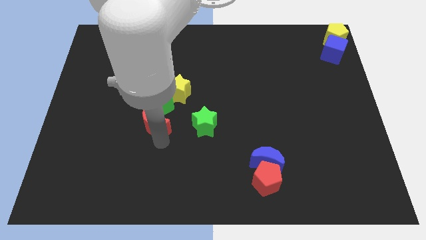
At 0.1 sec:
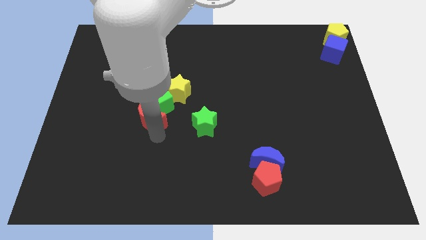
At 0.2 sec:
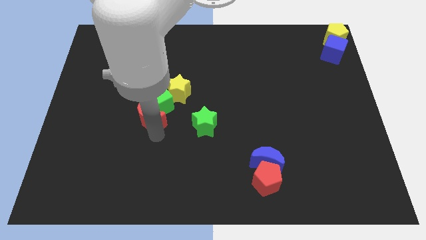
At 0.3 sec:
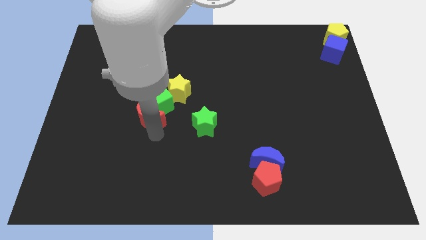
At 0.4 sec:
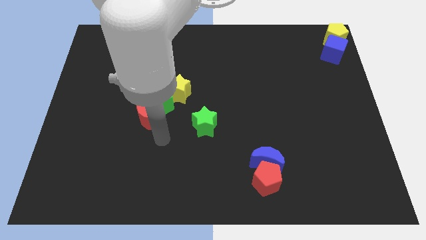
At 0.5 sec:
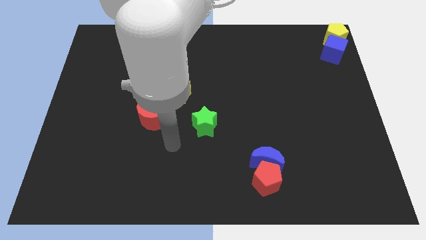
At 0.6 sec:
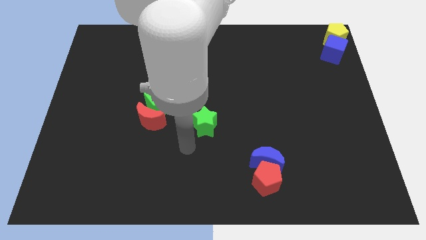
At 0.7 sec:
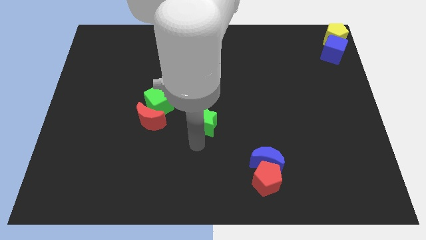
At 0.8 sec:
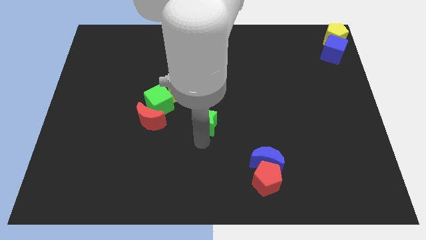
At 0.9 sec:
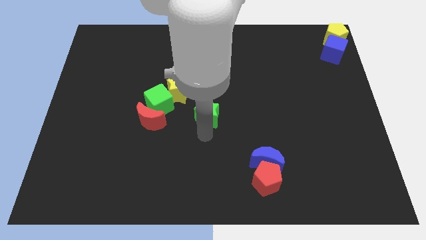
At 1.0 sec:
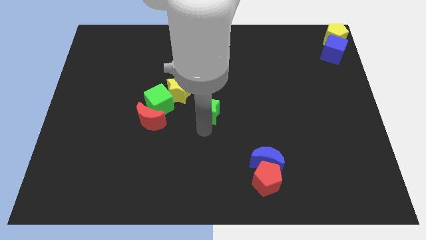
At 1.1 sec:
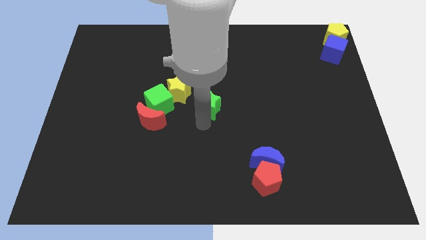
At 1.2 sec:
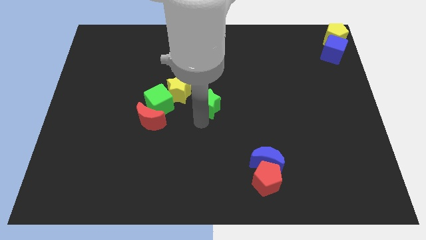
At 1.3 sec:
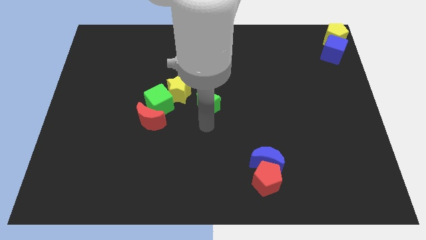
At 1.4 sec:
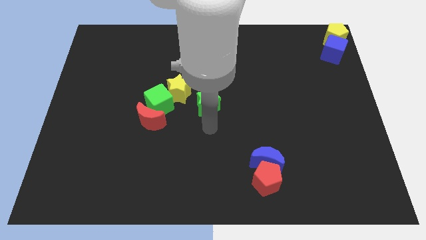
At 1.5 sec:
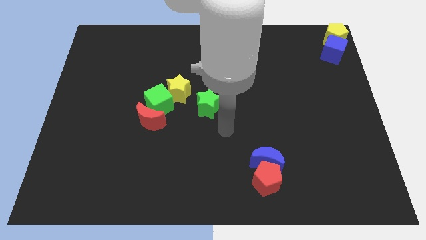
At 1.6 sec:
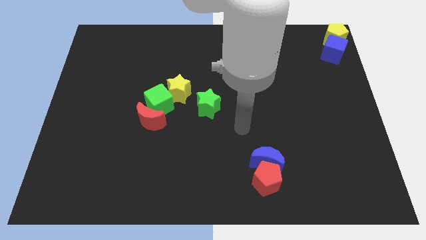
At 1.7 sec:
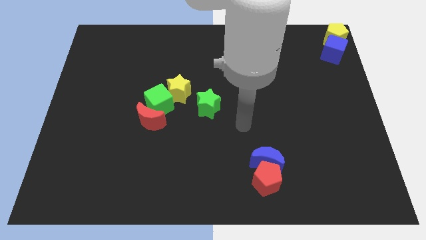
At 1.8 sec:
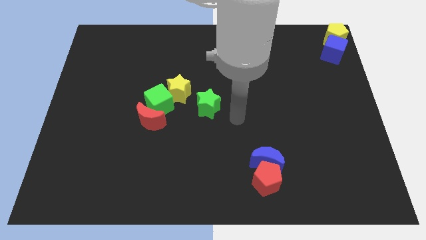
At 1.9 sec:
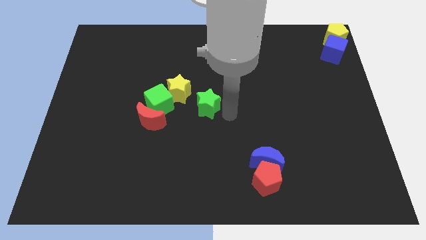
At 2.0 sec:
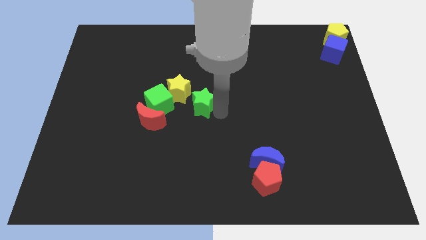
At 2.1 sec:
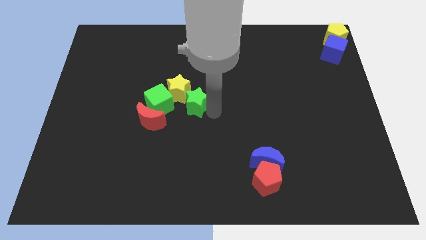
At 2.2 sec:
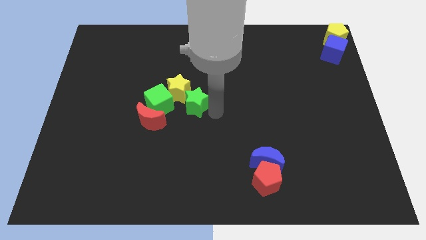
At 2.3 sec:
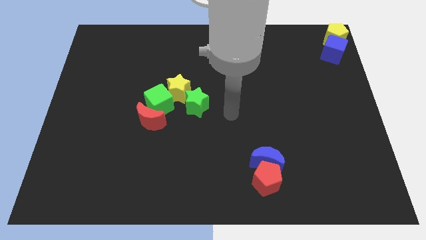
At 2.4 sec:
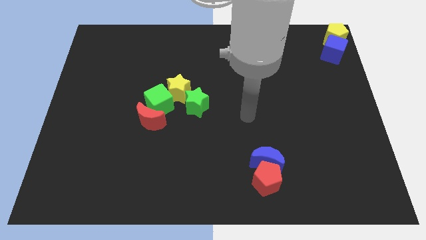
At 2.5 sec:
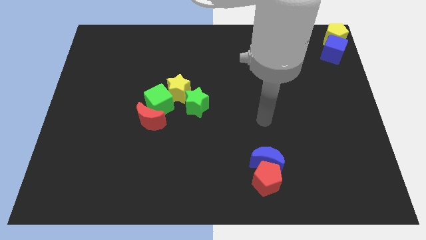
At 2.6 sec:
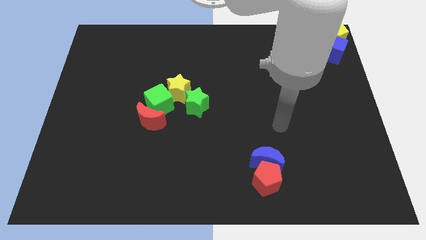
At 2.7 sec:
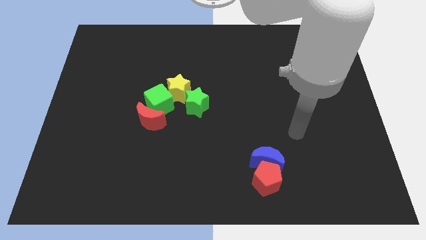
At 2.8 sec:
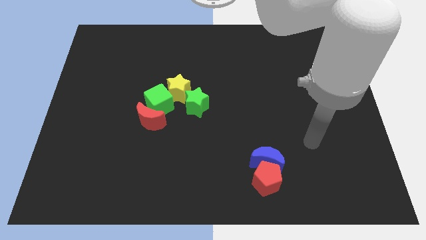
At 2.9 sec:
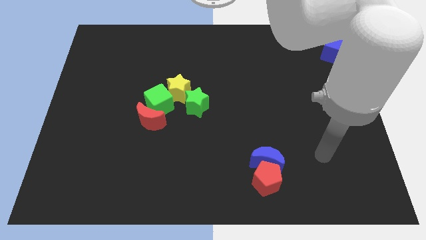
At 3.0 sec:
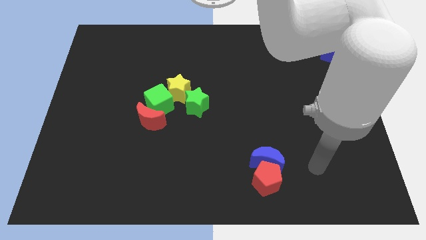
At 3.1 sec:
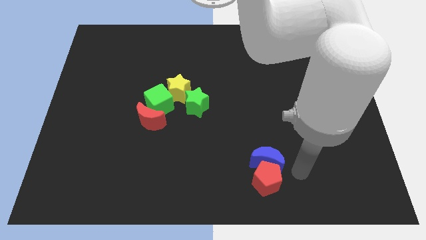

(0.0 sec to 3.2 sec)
move the green star vertically to the green cube

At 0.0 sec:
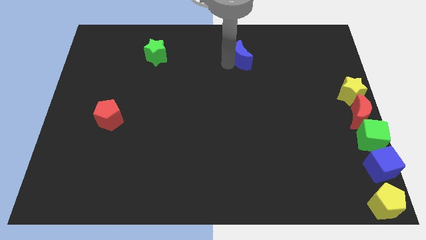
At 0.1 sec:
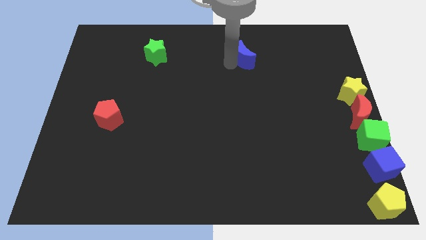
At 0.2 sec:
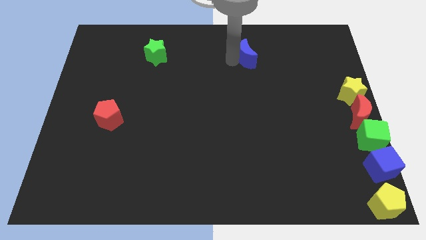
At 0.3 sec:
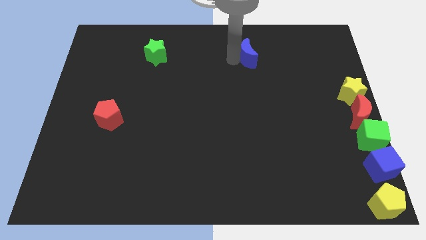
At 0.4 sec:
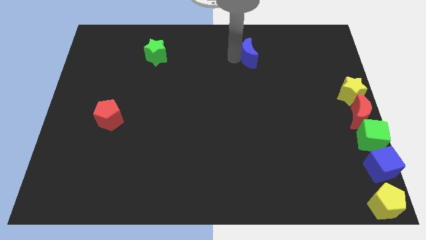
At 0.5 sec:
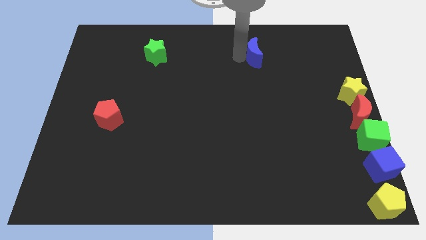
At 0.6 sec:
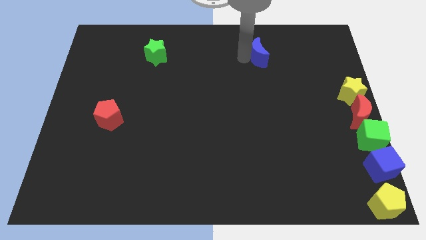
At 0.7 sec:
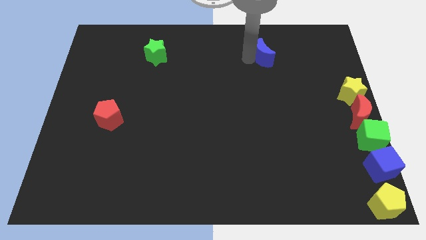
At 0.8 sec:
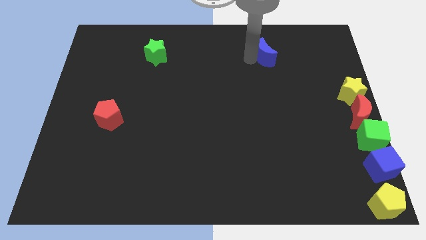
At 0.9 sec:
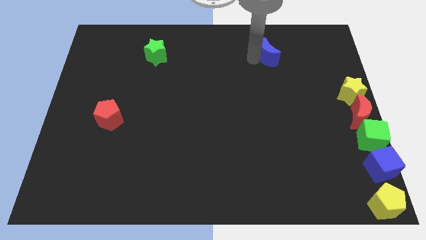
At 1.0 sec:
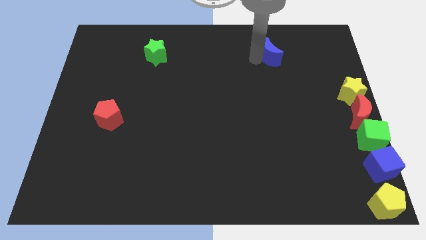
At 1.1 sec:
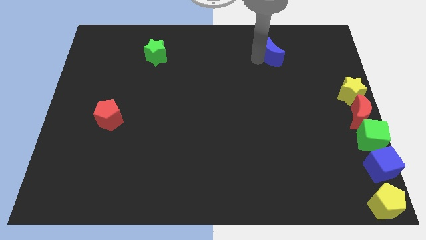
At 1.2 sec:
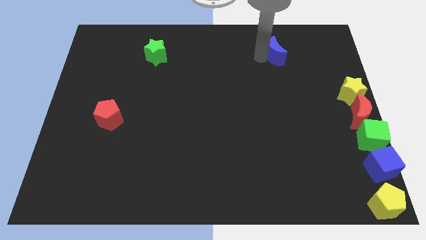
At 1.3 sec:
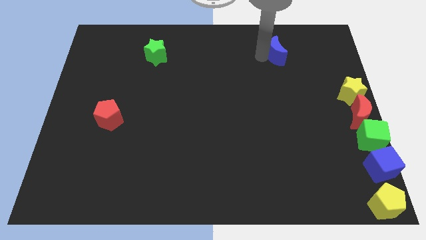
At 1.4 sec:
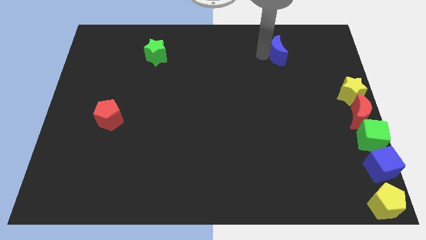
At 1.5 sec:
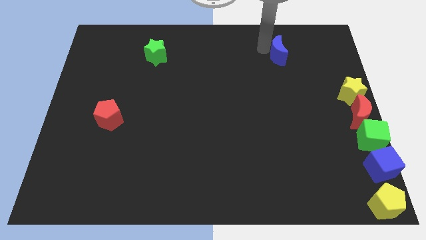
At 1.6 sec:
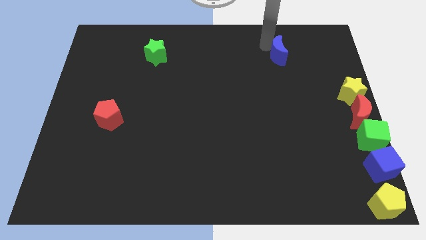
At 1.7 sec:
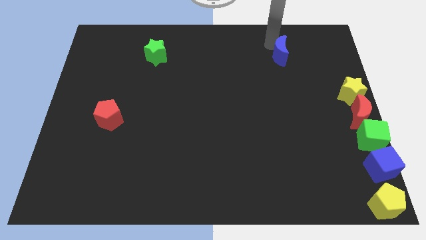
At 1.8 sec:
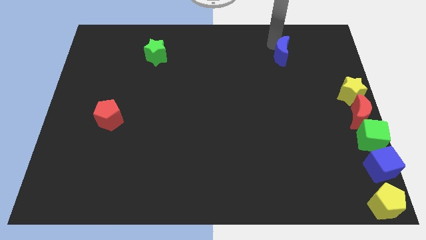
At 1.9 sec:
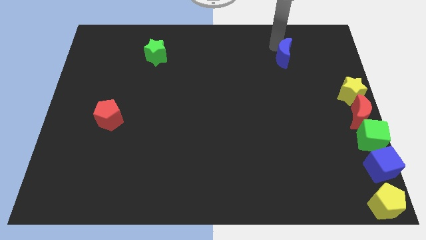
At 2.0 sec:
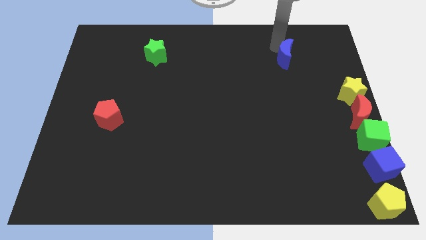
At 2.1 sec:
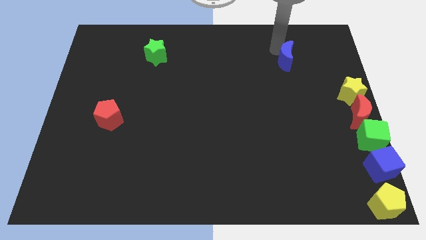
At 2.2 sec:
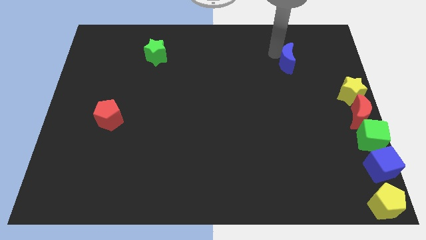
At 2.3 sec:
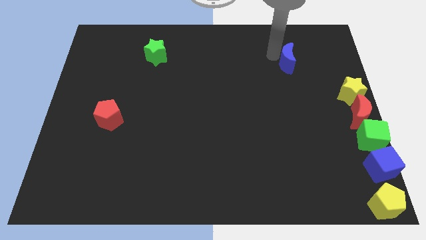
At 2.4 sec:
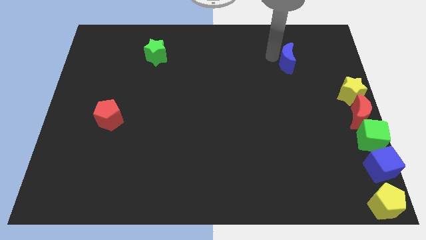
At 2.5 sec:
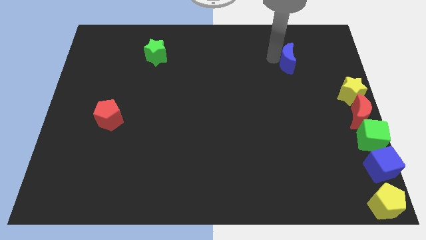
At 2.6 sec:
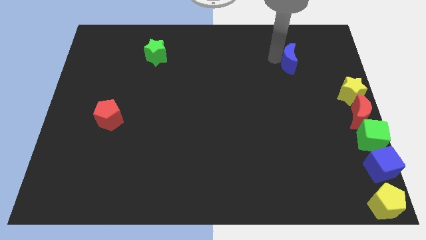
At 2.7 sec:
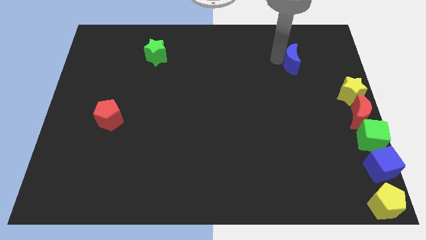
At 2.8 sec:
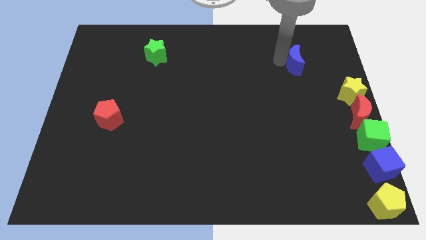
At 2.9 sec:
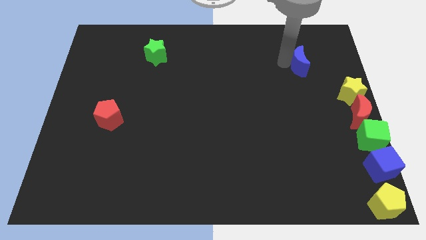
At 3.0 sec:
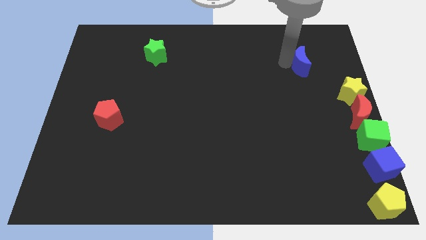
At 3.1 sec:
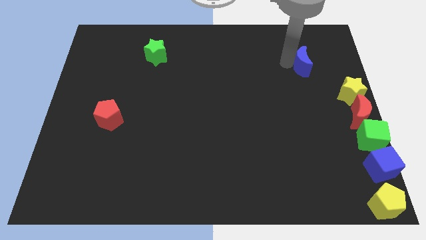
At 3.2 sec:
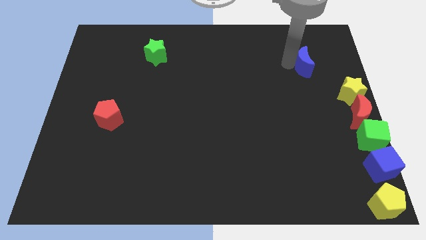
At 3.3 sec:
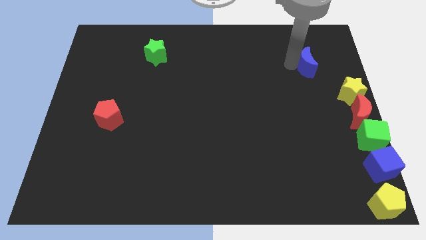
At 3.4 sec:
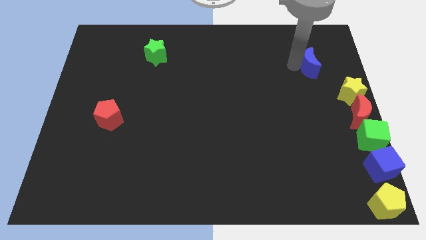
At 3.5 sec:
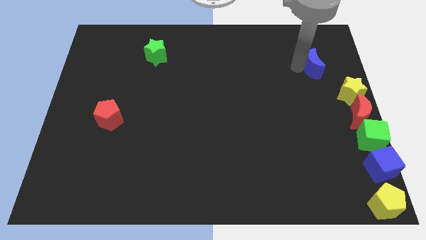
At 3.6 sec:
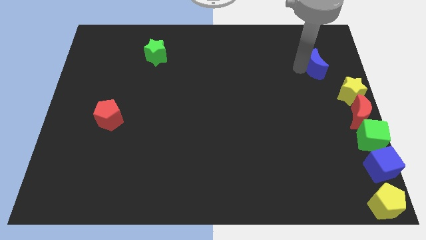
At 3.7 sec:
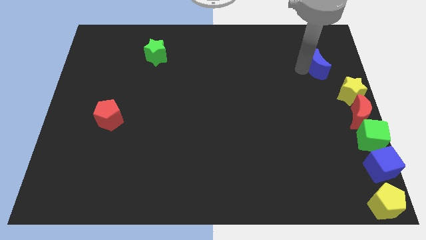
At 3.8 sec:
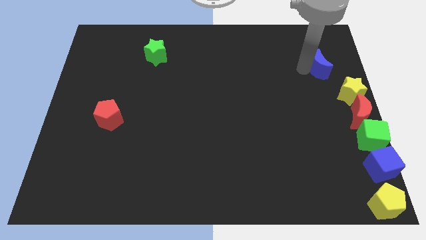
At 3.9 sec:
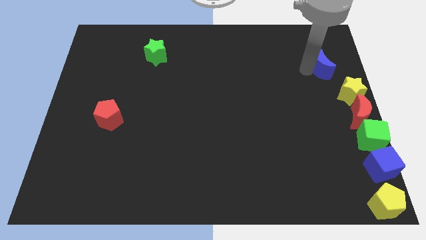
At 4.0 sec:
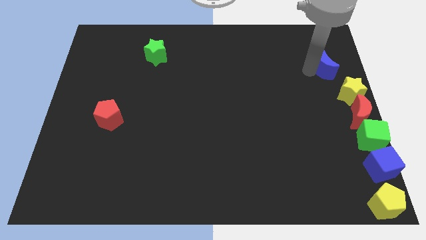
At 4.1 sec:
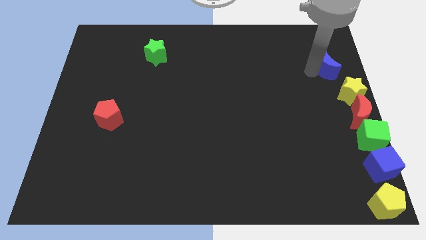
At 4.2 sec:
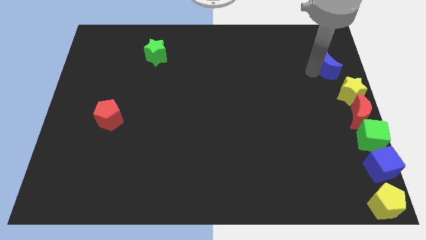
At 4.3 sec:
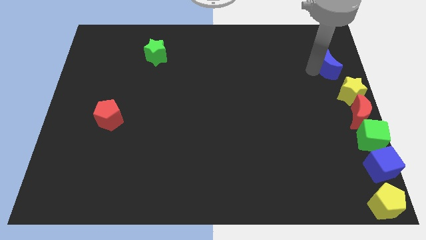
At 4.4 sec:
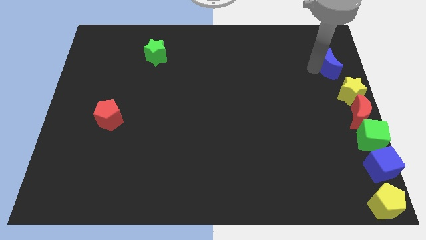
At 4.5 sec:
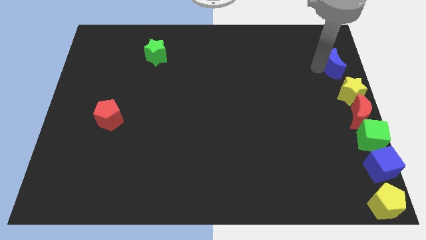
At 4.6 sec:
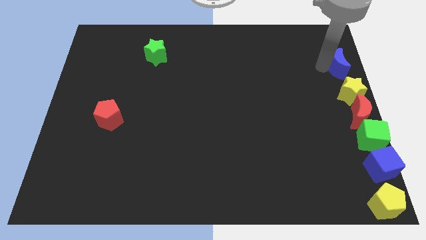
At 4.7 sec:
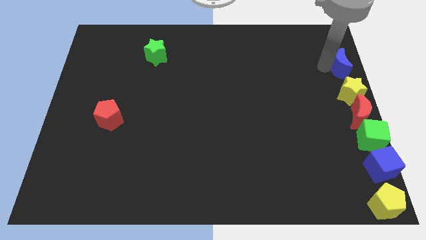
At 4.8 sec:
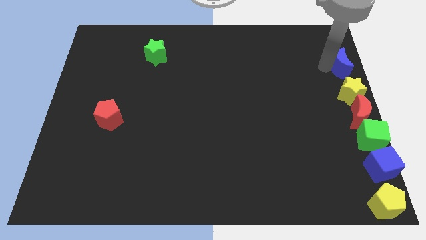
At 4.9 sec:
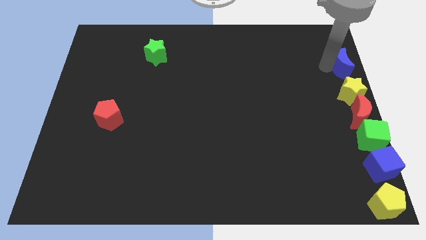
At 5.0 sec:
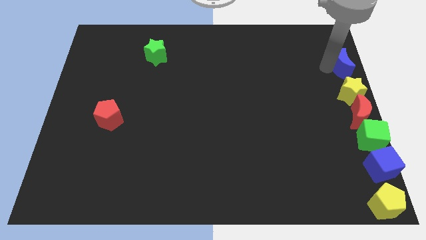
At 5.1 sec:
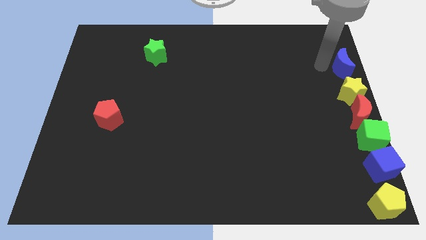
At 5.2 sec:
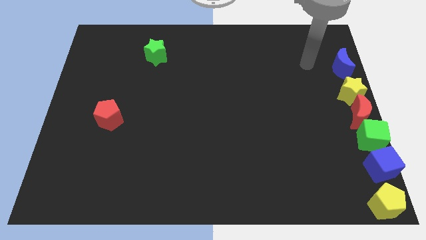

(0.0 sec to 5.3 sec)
put the blue crescent above the vertical line of blocks

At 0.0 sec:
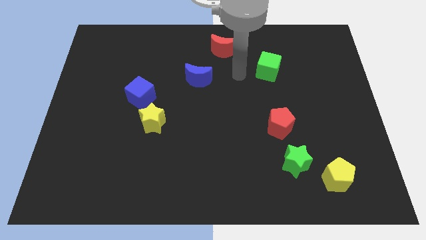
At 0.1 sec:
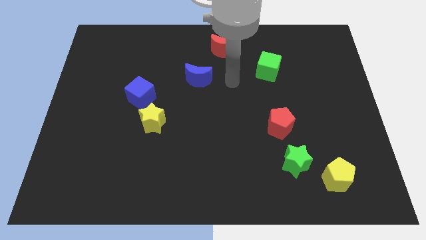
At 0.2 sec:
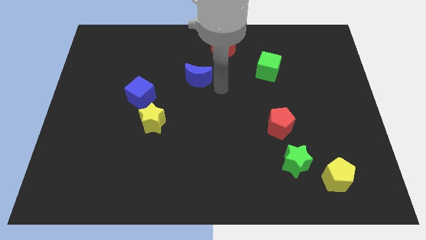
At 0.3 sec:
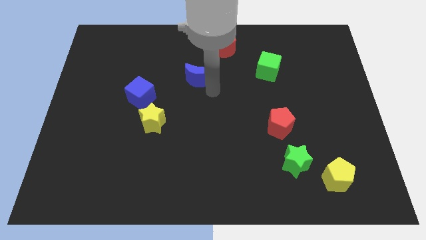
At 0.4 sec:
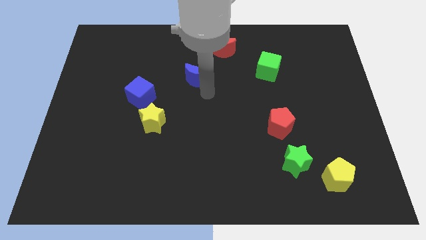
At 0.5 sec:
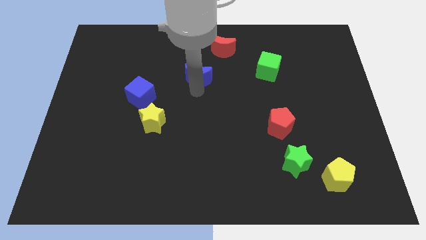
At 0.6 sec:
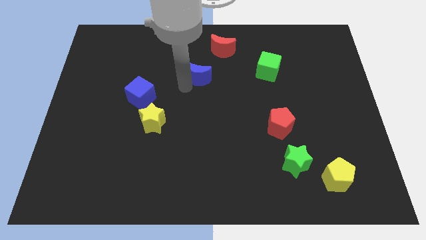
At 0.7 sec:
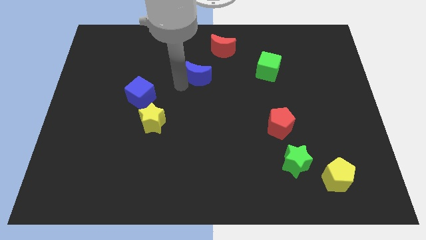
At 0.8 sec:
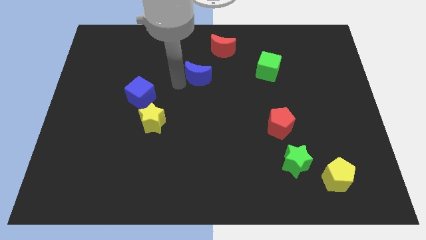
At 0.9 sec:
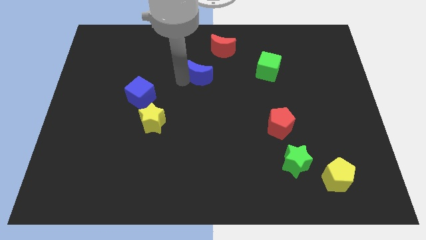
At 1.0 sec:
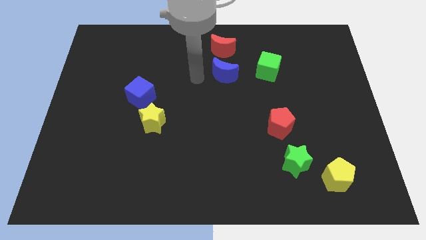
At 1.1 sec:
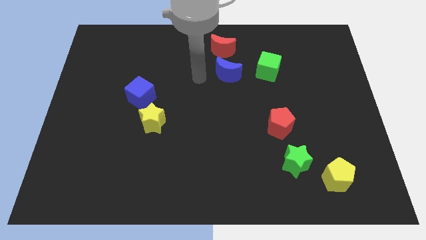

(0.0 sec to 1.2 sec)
place the blue moon vertically below the red moon
